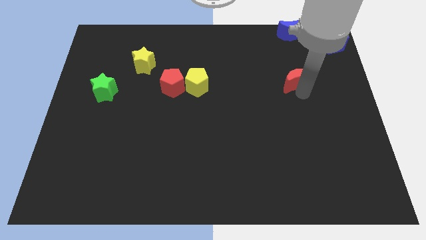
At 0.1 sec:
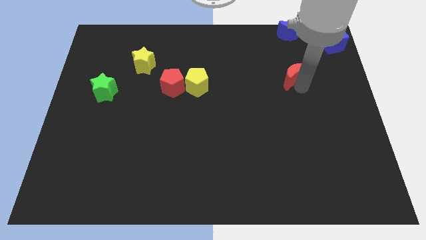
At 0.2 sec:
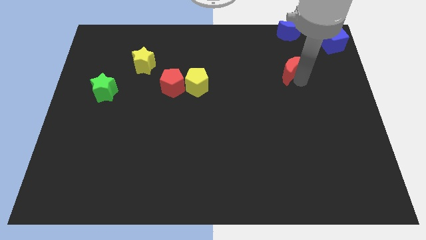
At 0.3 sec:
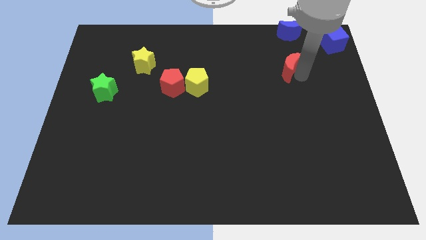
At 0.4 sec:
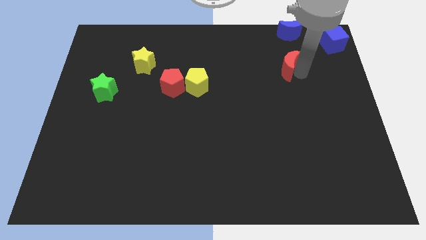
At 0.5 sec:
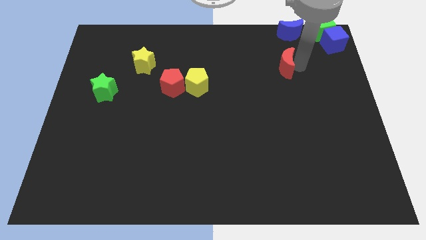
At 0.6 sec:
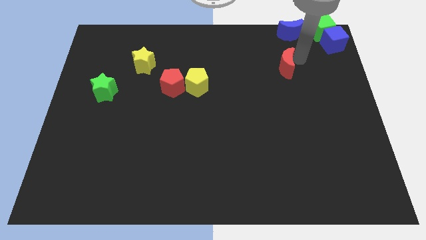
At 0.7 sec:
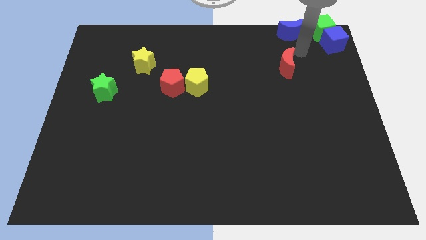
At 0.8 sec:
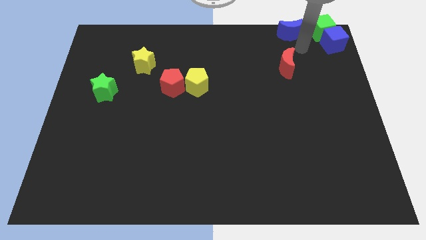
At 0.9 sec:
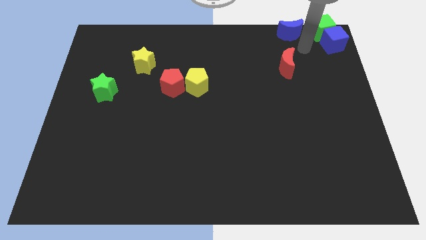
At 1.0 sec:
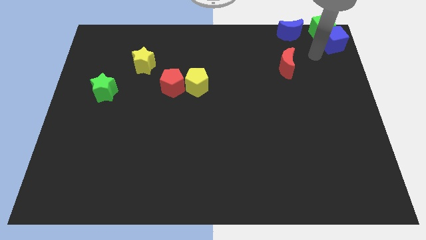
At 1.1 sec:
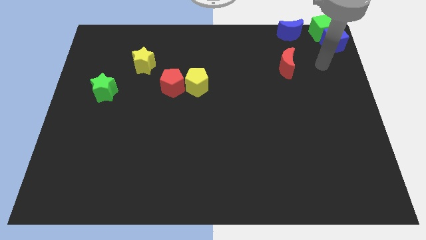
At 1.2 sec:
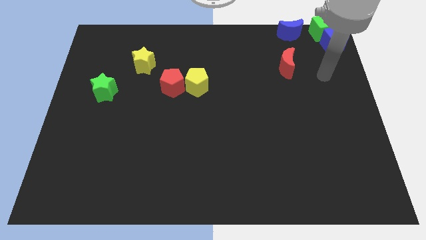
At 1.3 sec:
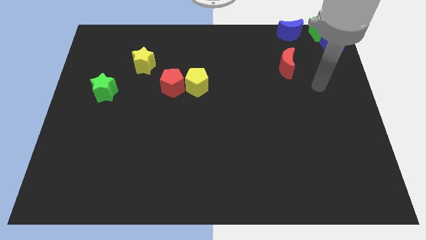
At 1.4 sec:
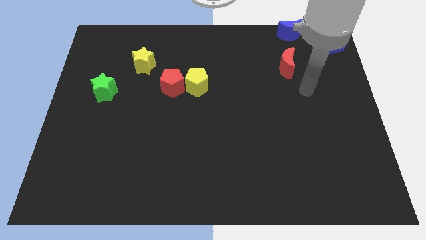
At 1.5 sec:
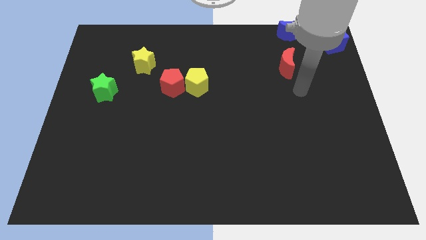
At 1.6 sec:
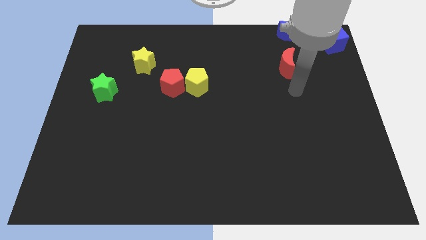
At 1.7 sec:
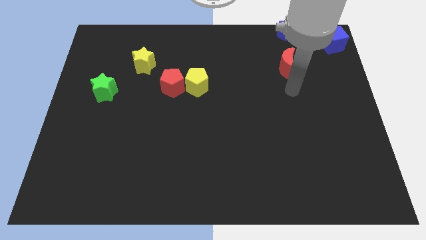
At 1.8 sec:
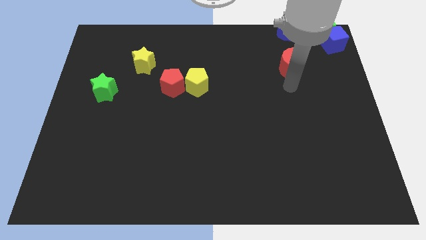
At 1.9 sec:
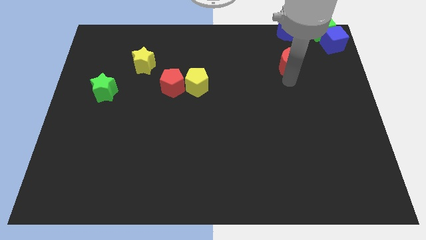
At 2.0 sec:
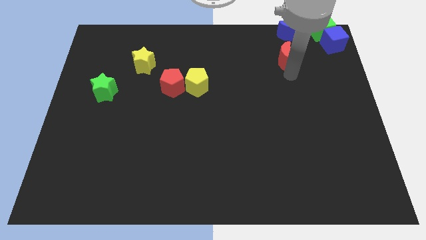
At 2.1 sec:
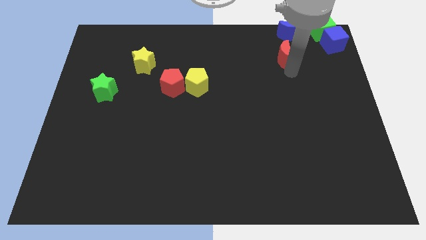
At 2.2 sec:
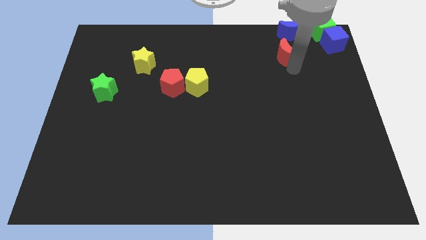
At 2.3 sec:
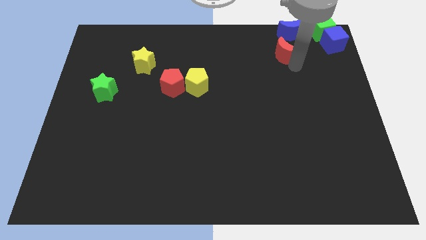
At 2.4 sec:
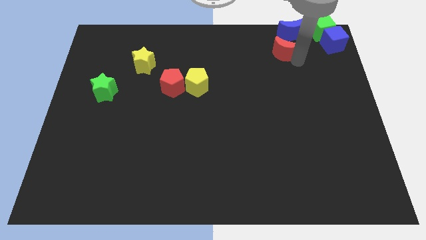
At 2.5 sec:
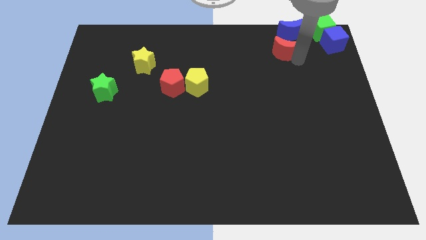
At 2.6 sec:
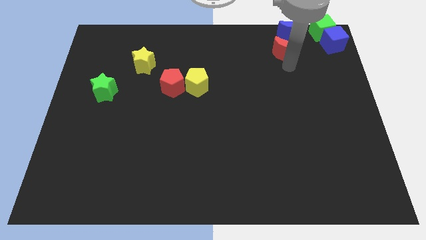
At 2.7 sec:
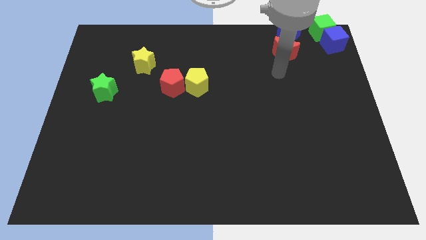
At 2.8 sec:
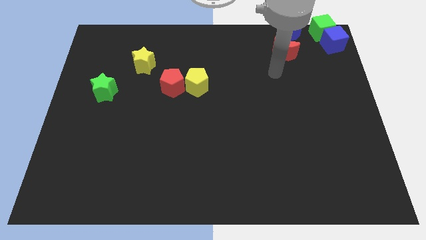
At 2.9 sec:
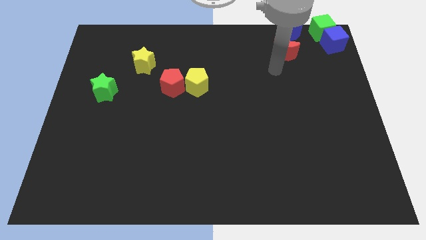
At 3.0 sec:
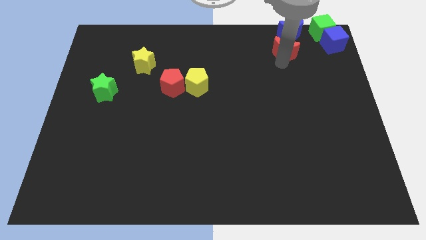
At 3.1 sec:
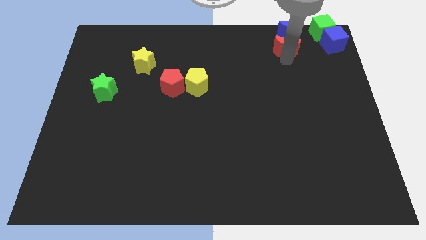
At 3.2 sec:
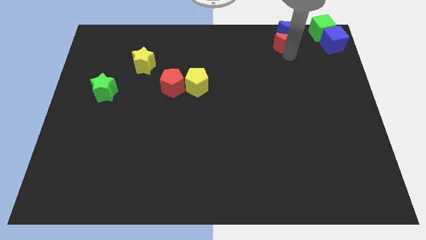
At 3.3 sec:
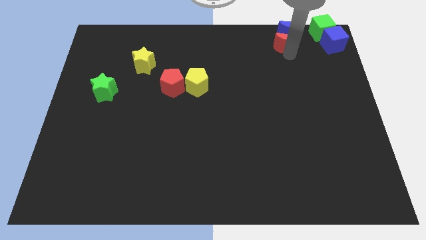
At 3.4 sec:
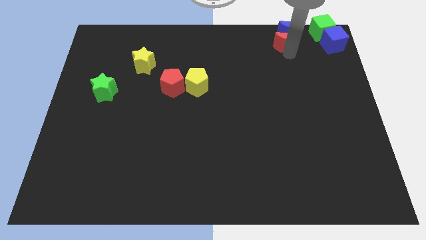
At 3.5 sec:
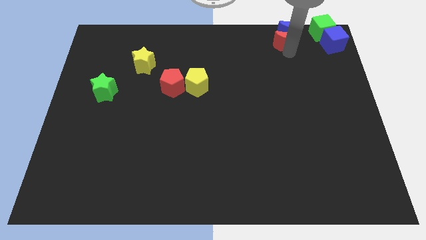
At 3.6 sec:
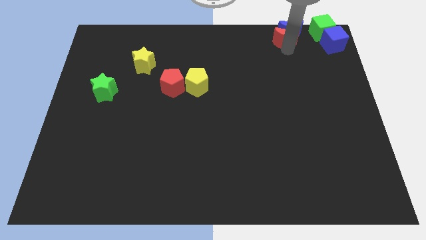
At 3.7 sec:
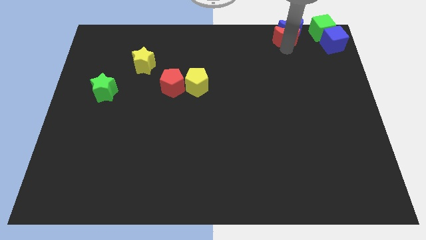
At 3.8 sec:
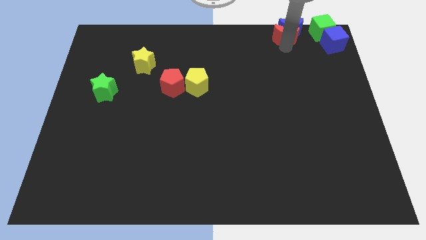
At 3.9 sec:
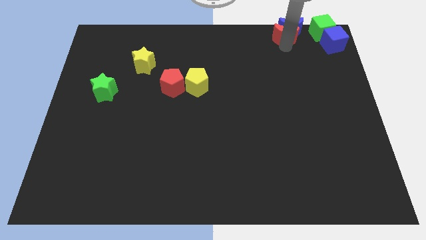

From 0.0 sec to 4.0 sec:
move red moon in to blue moon

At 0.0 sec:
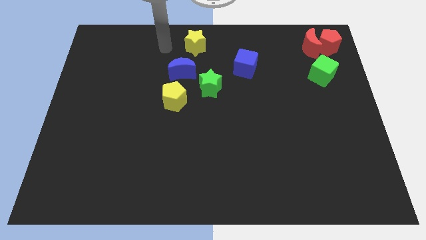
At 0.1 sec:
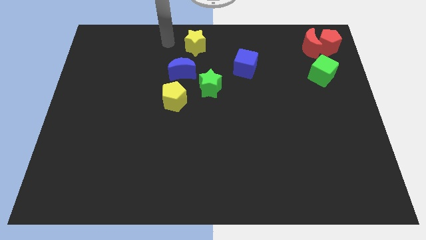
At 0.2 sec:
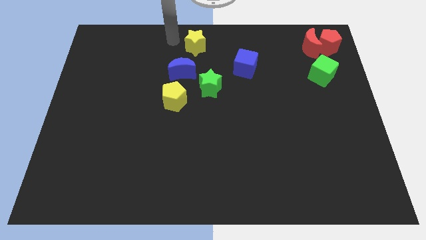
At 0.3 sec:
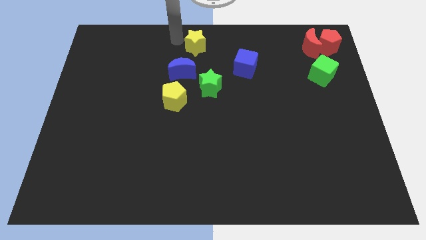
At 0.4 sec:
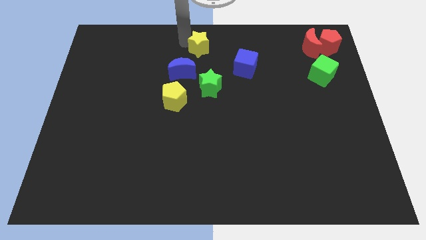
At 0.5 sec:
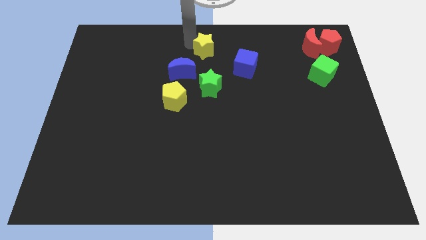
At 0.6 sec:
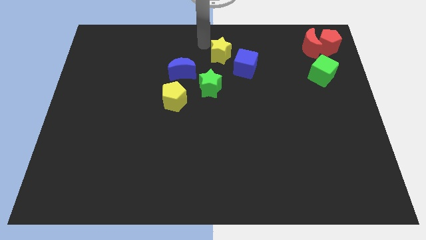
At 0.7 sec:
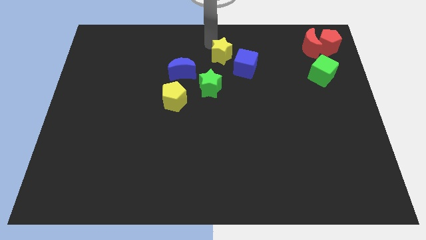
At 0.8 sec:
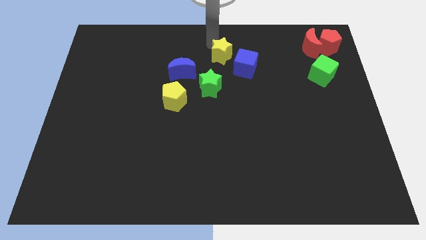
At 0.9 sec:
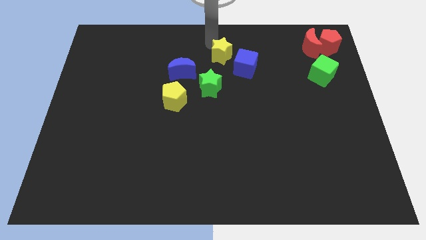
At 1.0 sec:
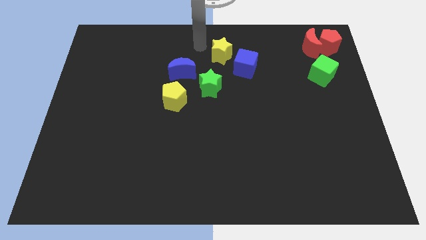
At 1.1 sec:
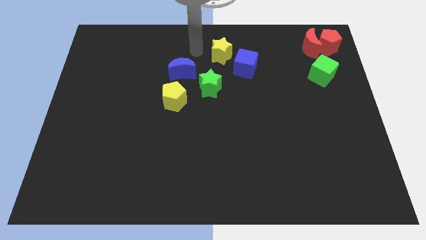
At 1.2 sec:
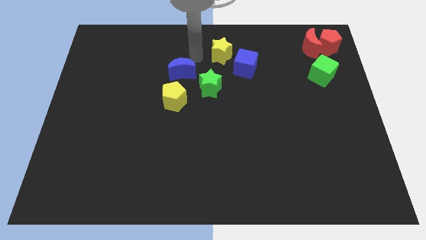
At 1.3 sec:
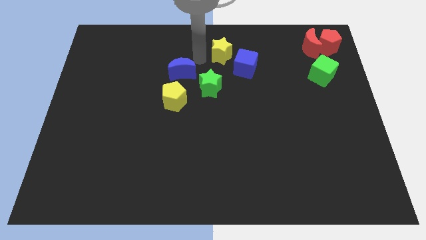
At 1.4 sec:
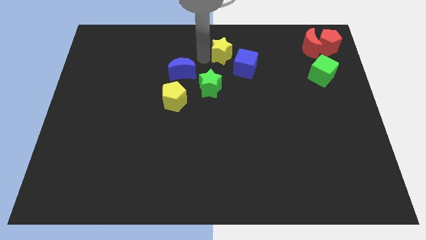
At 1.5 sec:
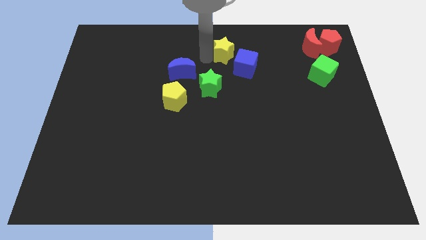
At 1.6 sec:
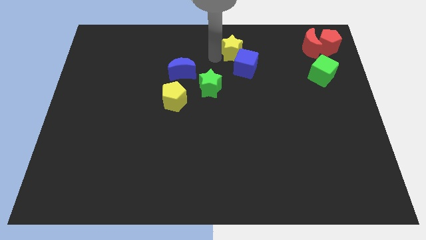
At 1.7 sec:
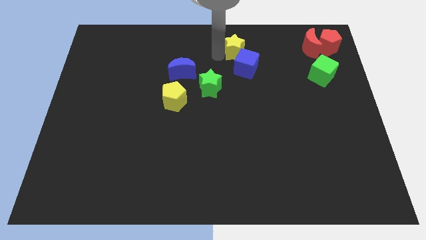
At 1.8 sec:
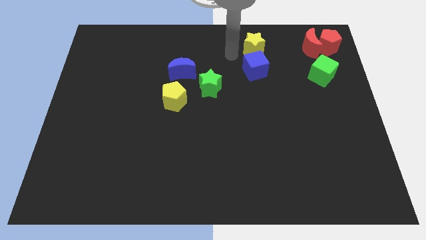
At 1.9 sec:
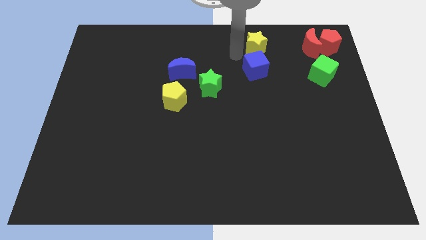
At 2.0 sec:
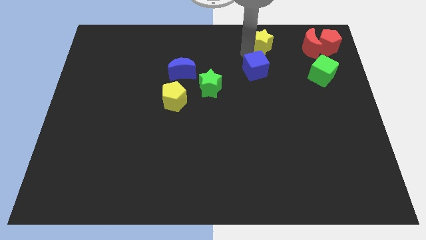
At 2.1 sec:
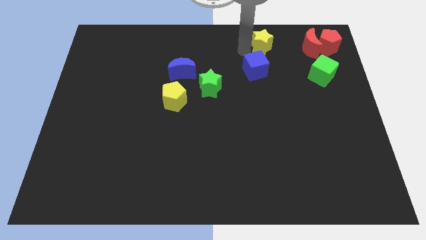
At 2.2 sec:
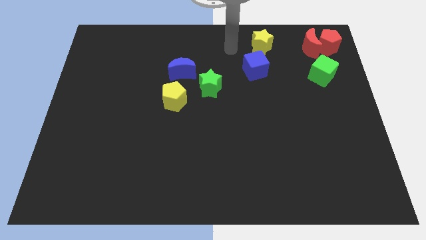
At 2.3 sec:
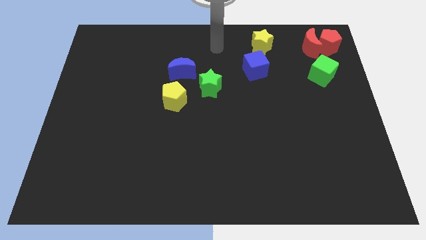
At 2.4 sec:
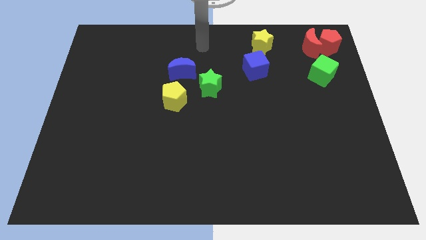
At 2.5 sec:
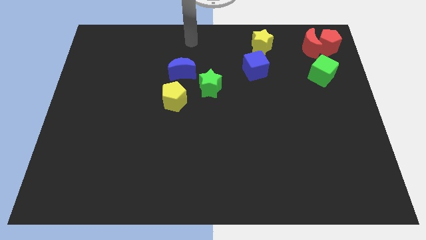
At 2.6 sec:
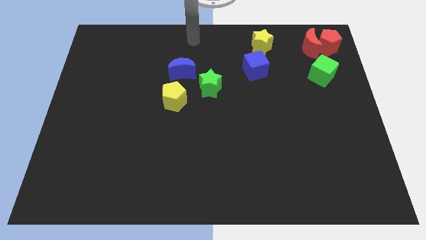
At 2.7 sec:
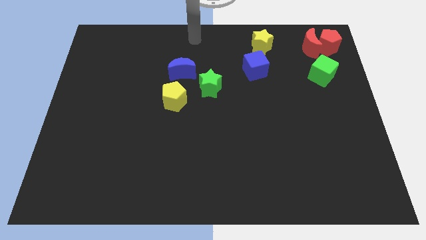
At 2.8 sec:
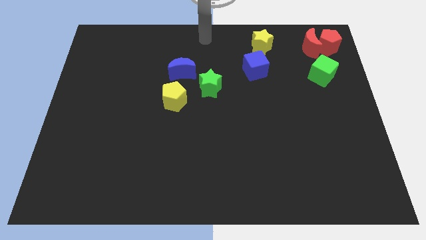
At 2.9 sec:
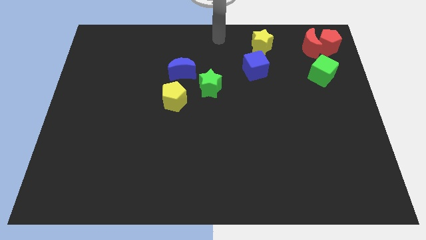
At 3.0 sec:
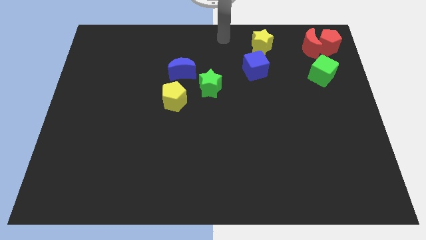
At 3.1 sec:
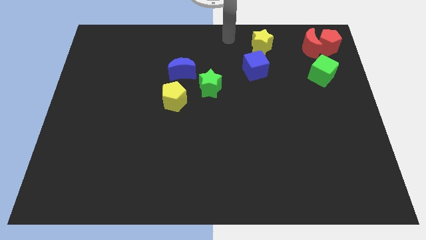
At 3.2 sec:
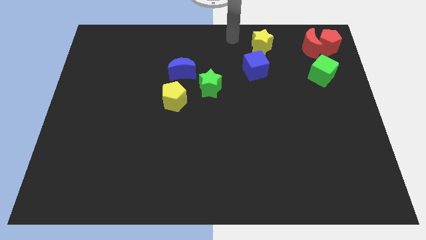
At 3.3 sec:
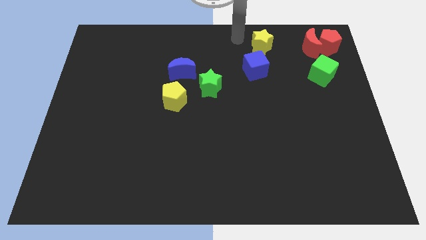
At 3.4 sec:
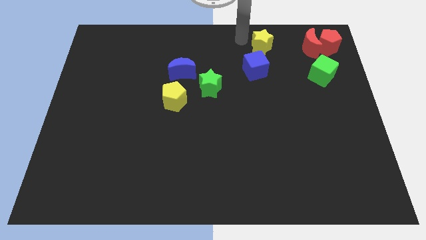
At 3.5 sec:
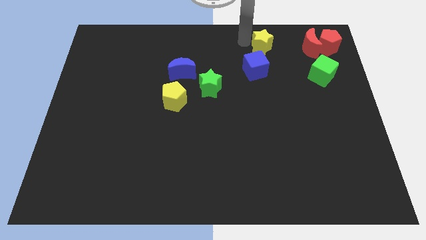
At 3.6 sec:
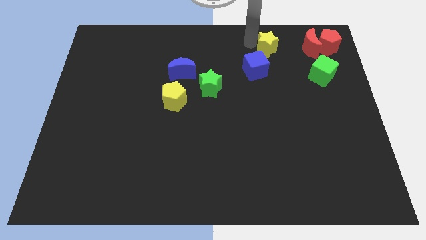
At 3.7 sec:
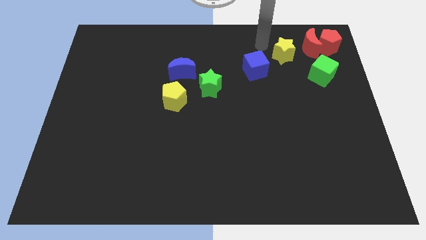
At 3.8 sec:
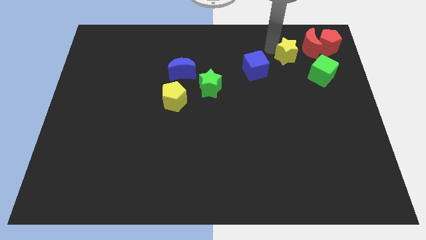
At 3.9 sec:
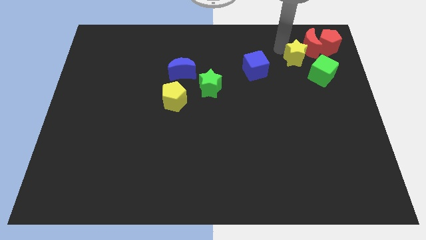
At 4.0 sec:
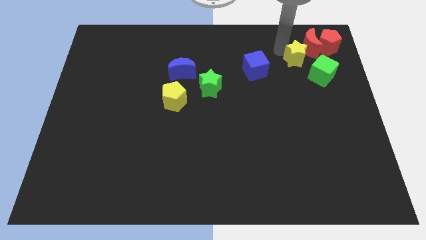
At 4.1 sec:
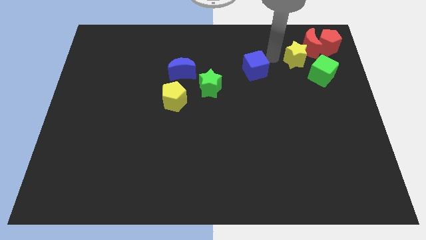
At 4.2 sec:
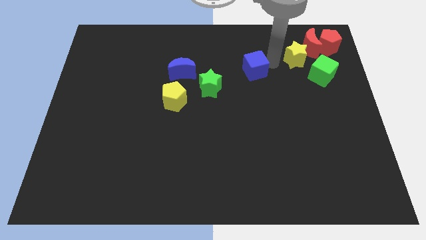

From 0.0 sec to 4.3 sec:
move the yellow star diagonally to the top left of green cube

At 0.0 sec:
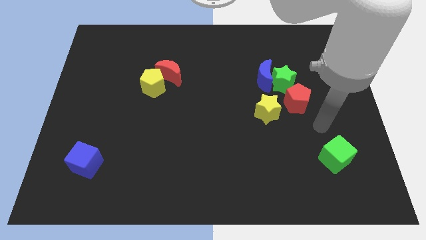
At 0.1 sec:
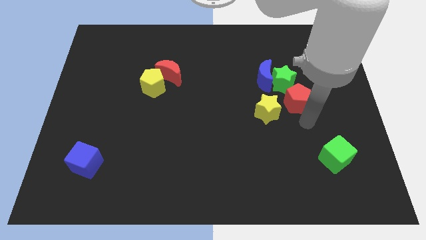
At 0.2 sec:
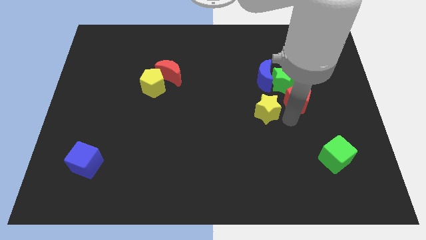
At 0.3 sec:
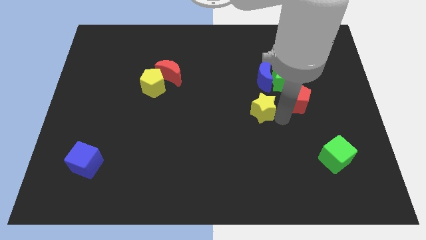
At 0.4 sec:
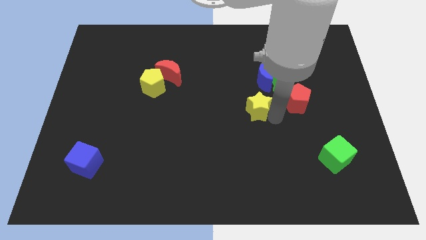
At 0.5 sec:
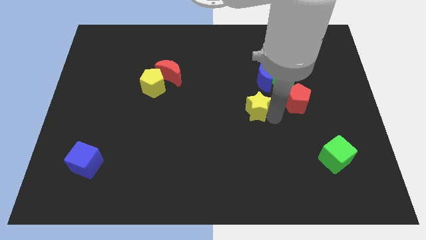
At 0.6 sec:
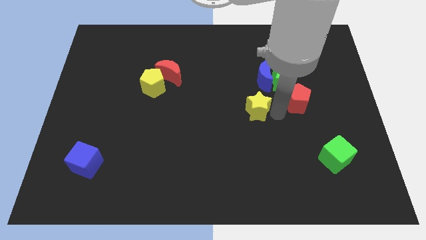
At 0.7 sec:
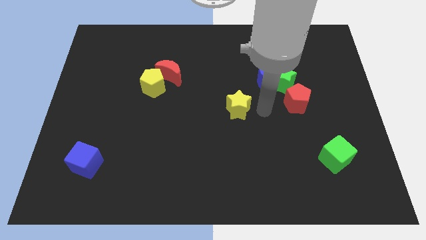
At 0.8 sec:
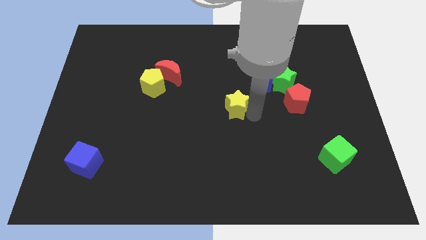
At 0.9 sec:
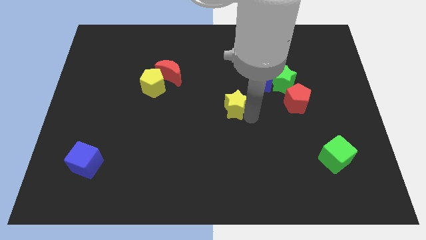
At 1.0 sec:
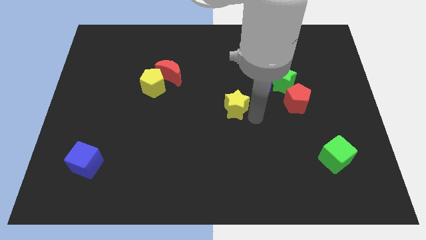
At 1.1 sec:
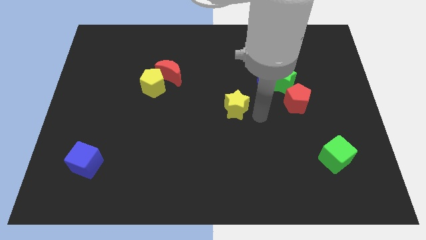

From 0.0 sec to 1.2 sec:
move the yellow star to the center of the board
